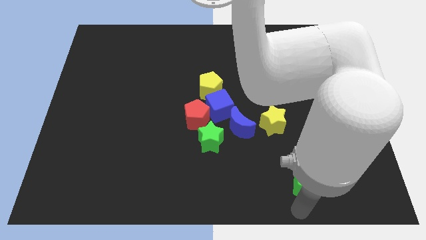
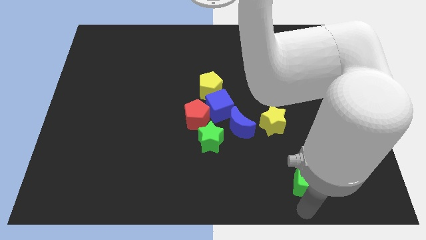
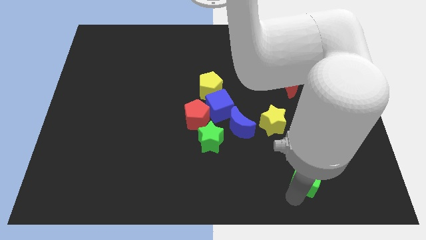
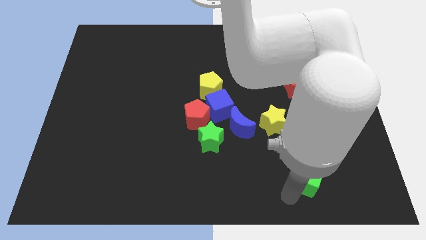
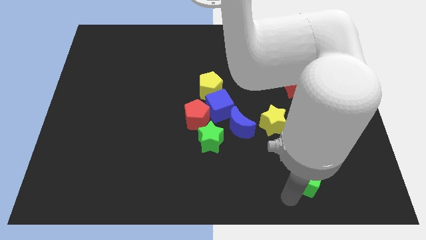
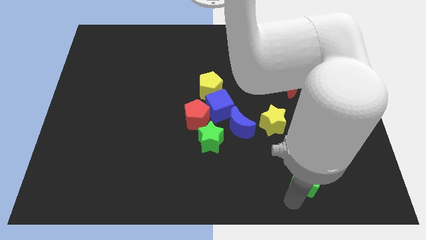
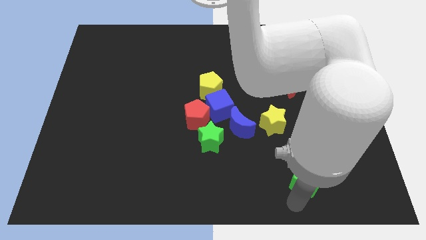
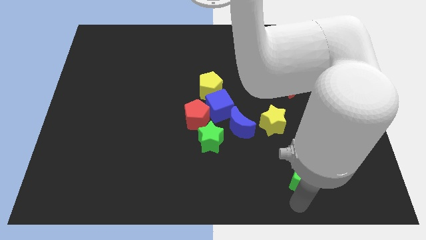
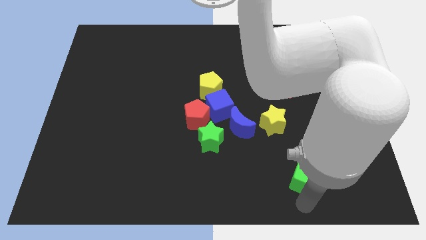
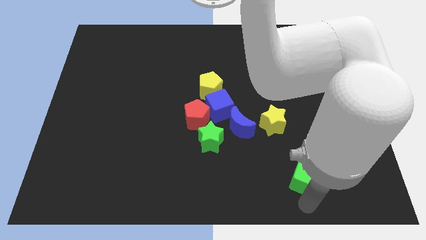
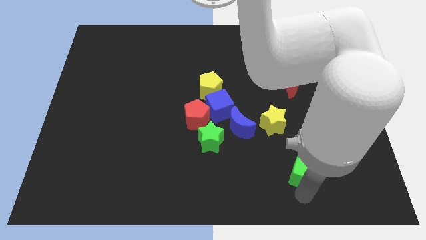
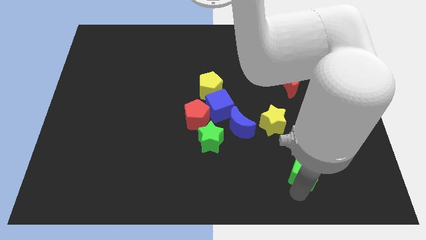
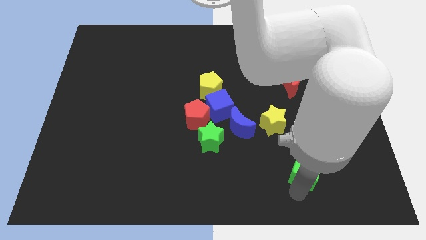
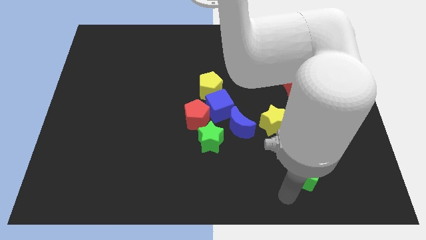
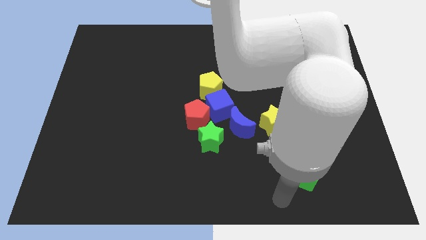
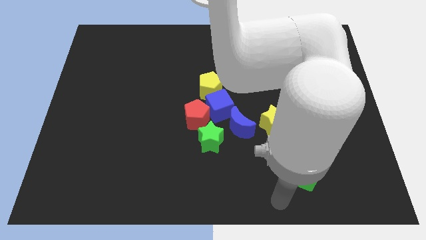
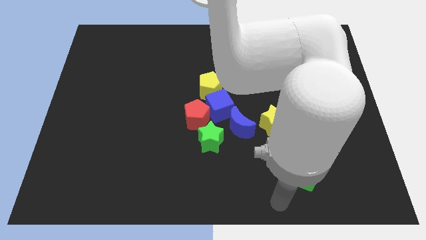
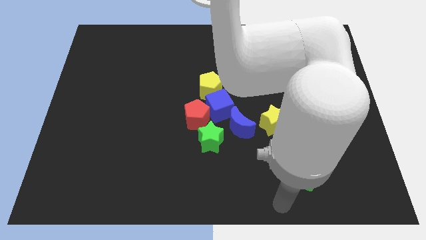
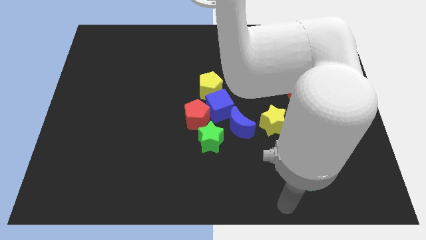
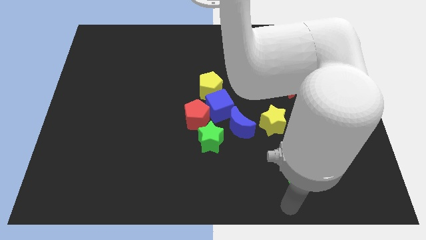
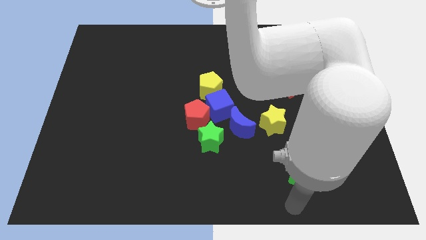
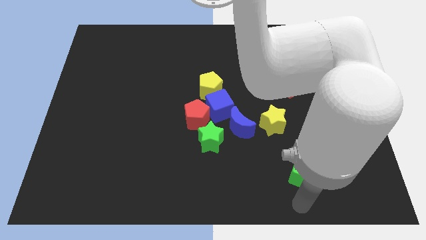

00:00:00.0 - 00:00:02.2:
tap on the green cube

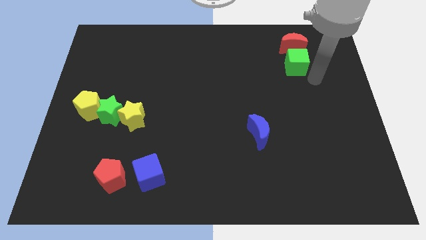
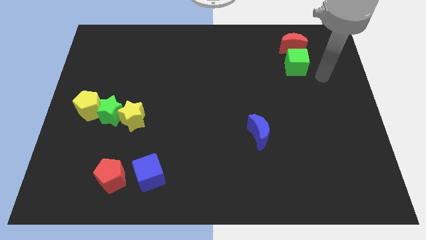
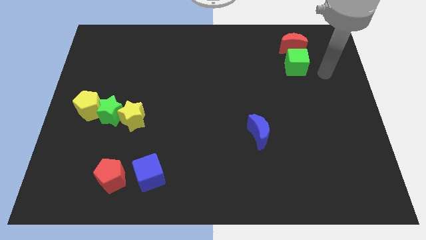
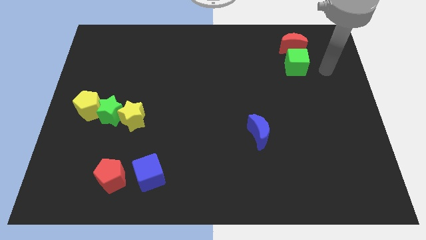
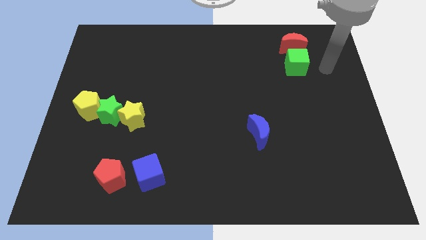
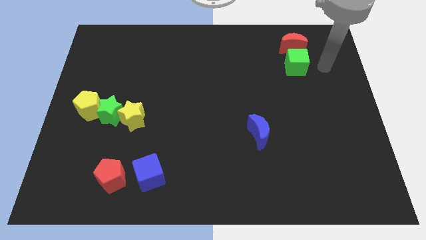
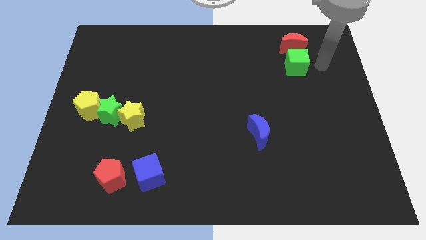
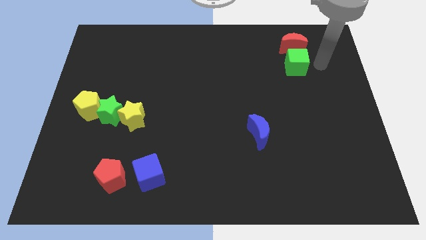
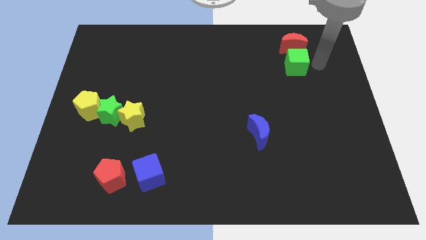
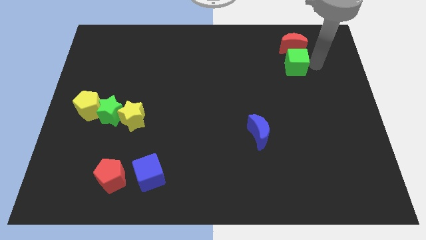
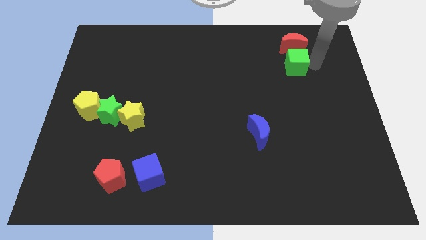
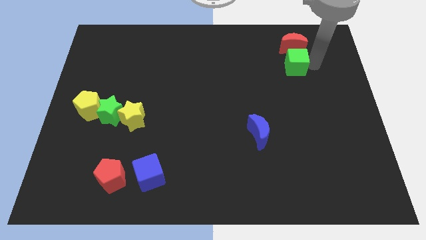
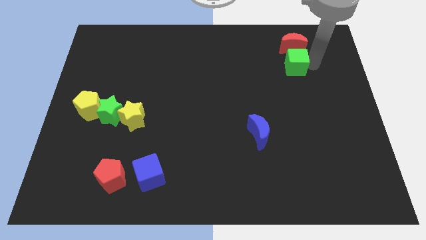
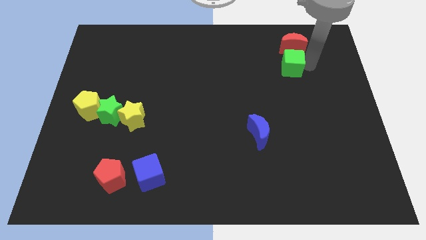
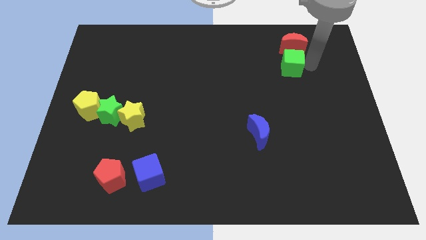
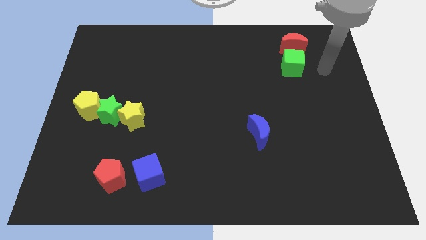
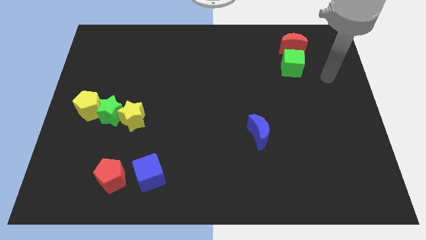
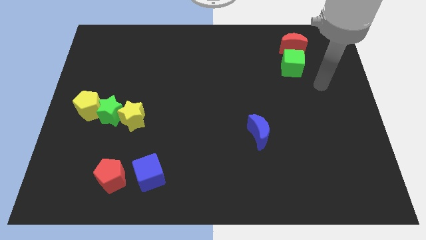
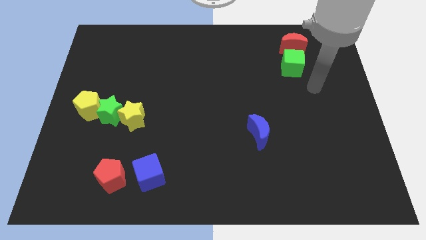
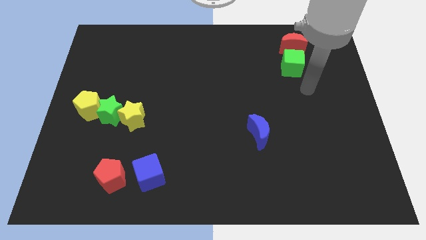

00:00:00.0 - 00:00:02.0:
adjust the green cube to the bottom side of the red moon

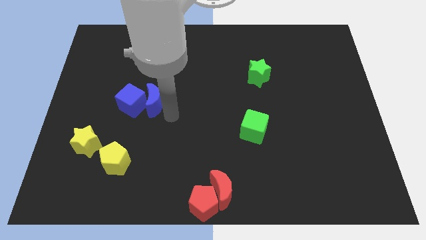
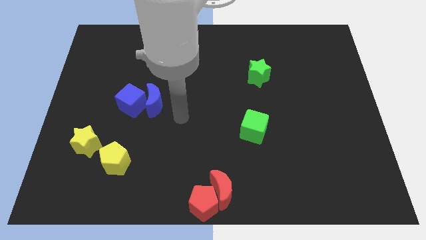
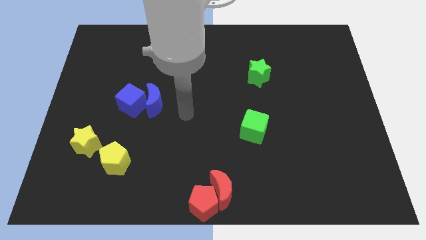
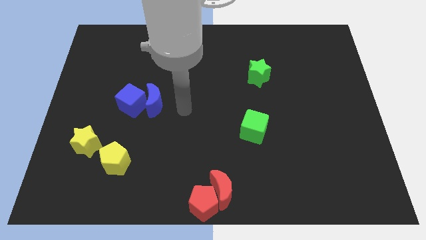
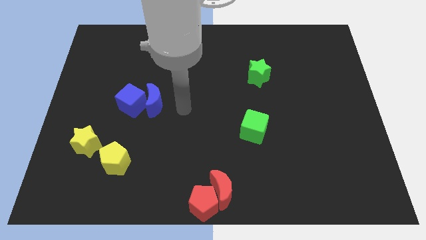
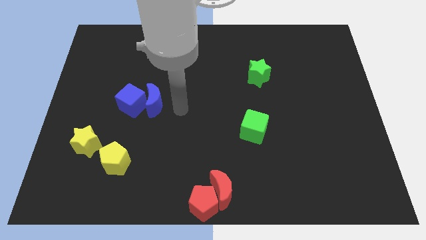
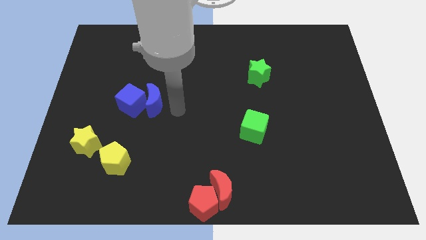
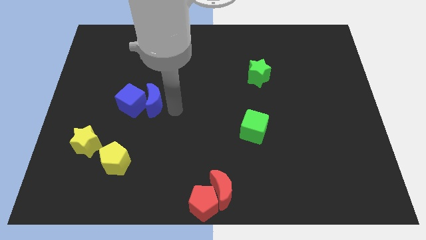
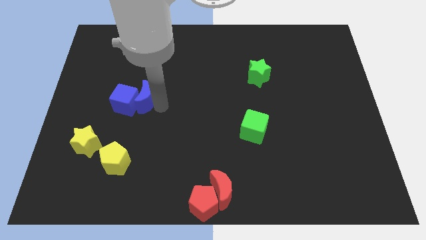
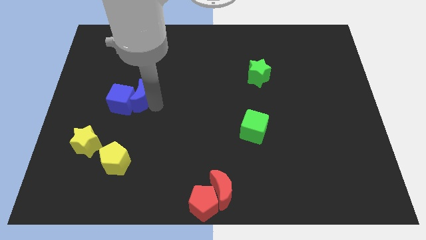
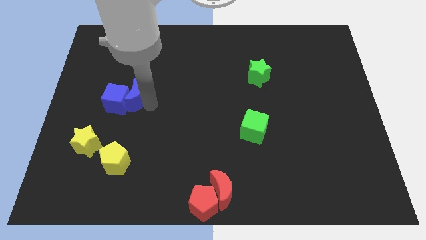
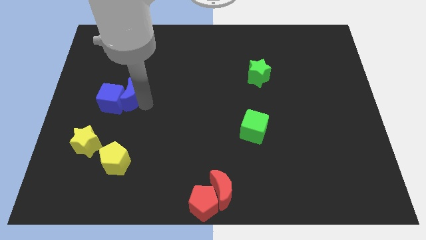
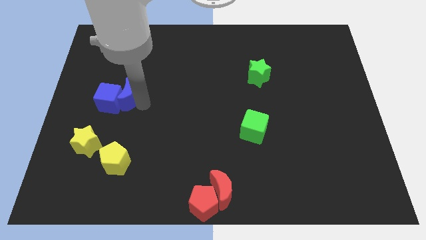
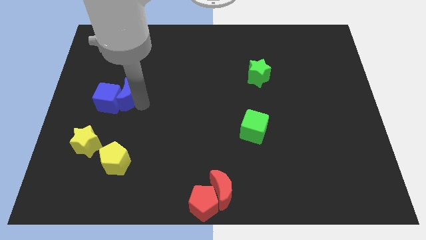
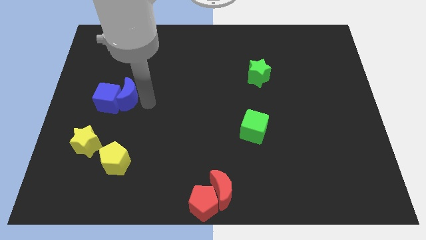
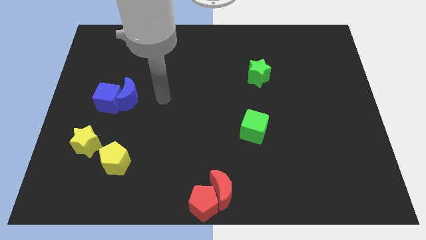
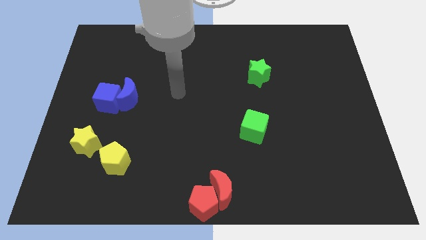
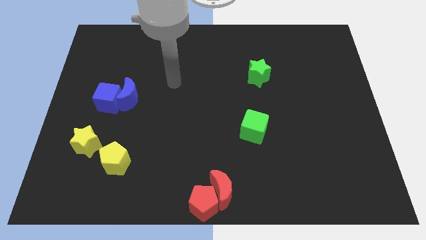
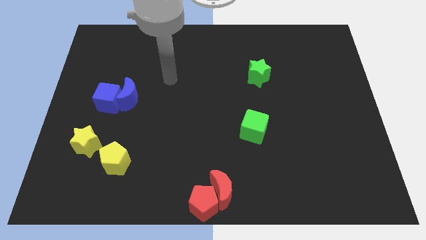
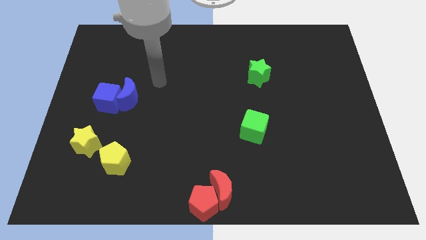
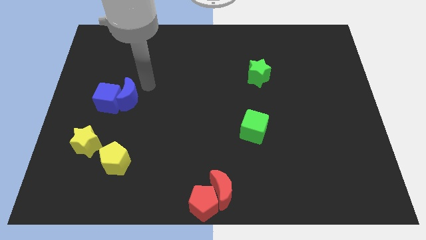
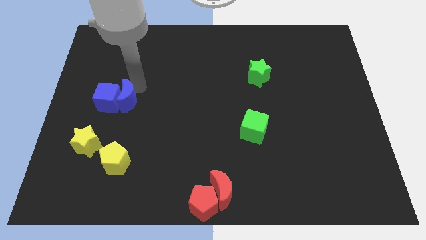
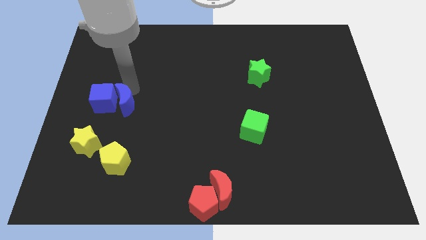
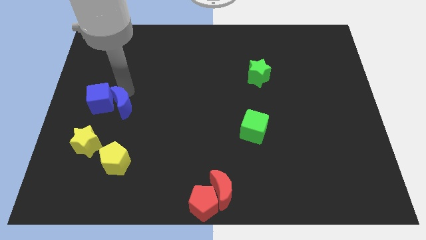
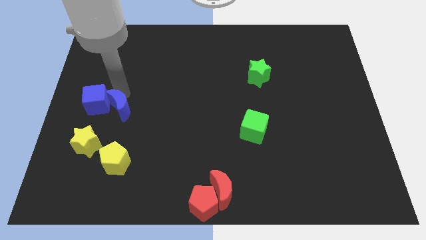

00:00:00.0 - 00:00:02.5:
push the blue blocks to the top of the yellow blocks

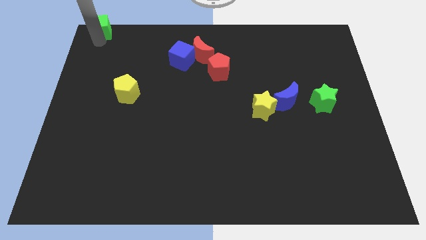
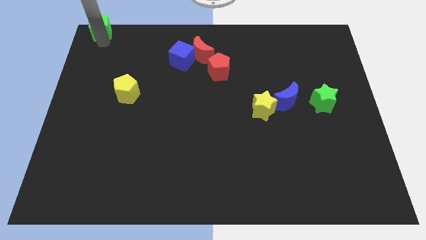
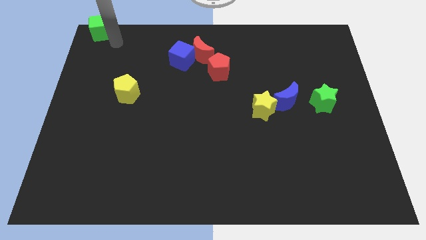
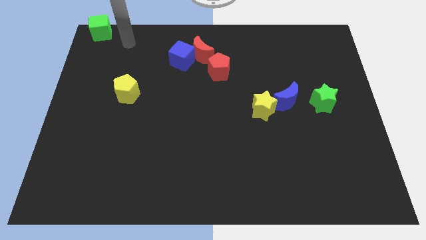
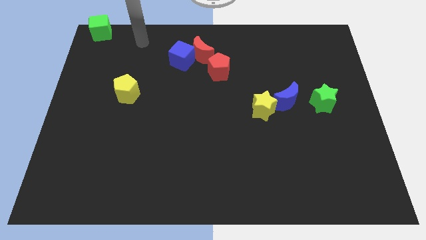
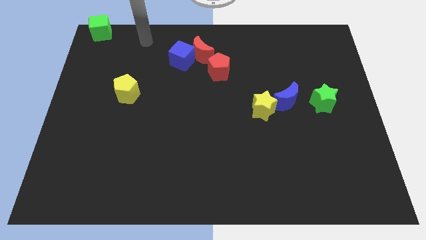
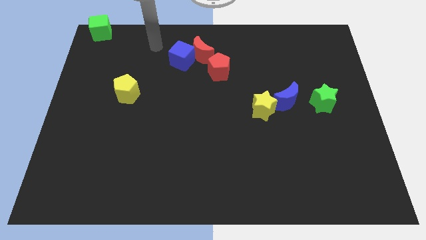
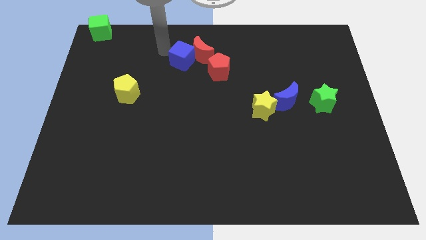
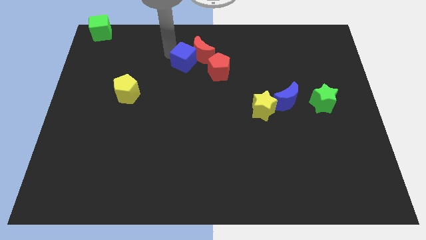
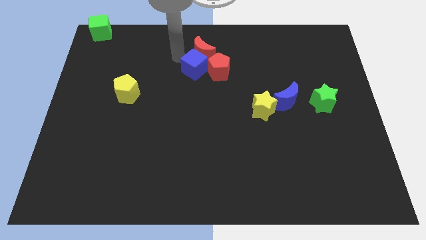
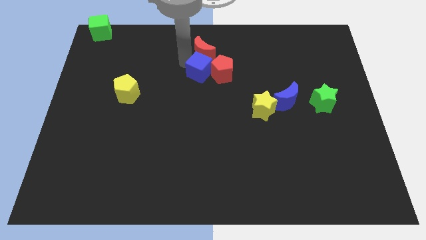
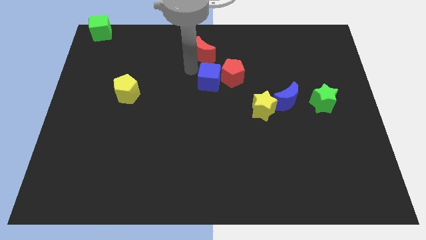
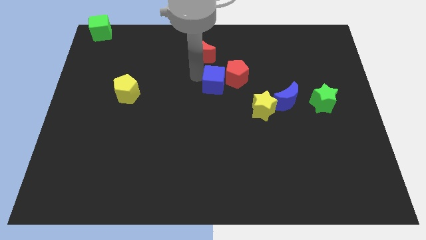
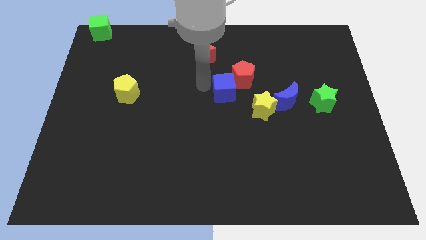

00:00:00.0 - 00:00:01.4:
slide the blue cube towards center

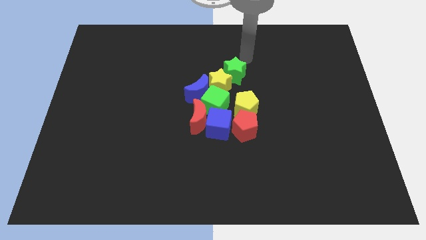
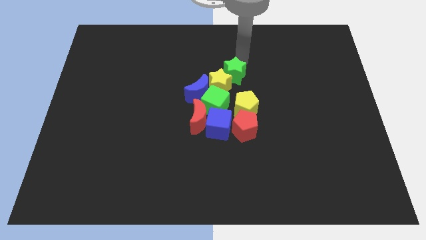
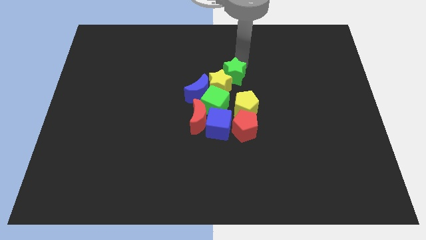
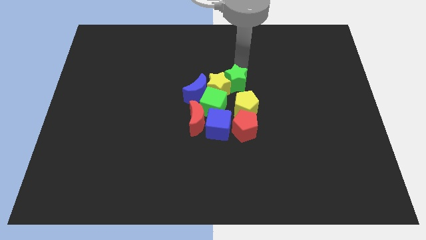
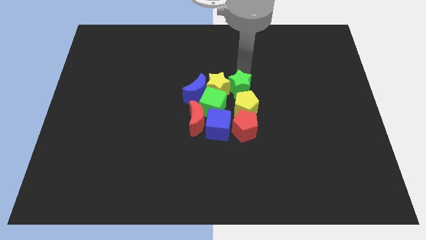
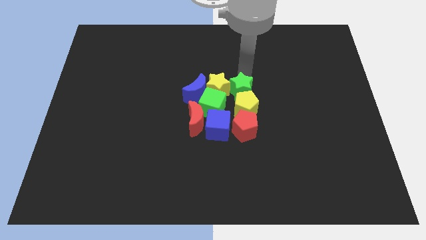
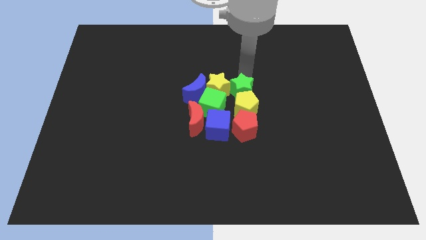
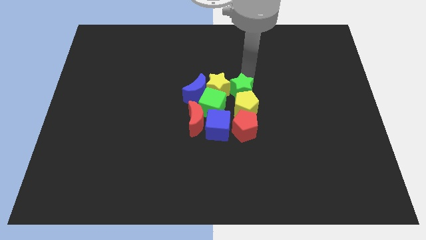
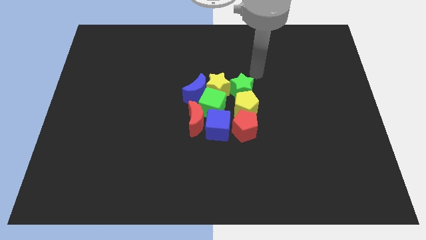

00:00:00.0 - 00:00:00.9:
place the green star above the yellow pentagon
